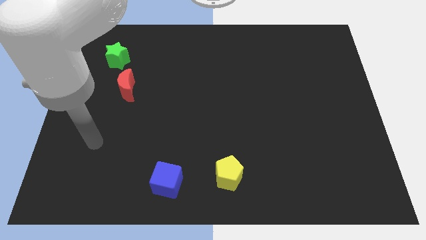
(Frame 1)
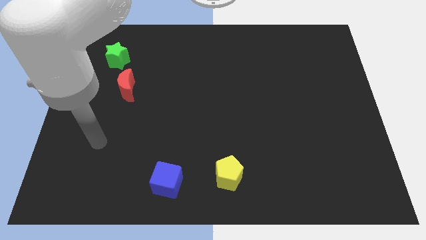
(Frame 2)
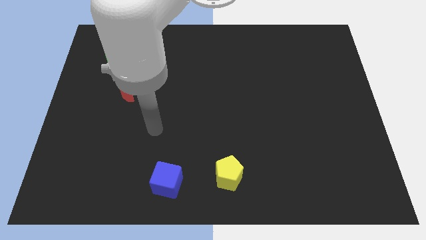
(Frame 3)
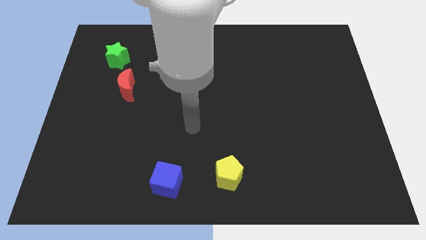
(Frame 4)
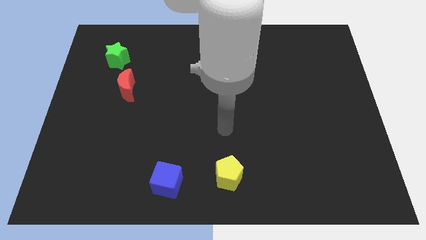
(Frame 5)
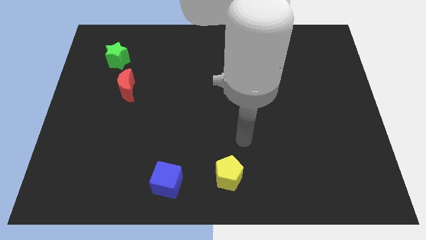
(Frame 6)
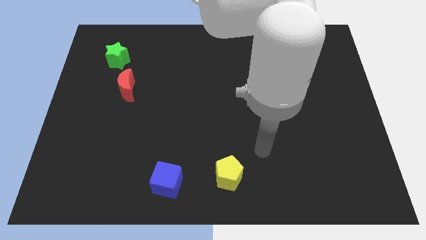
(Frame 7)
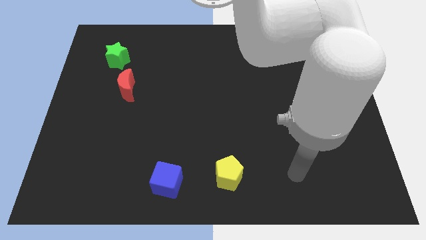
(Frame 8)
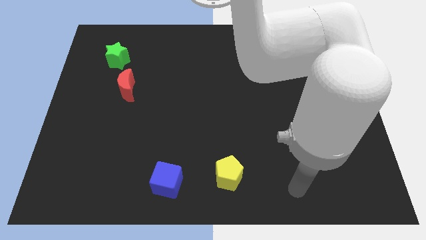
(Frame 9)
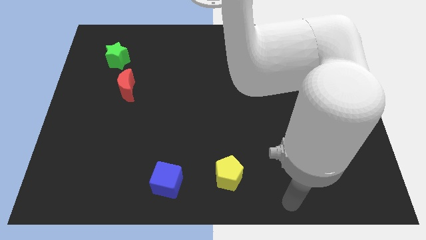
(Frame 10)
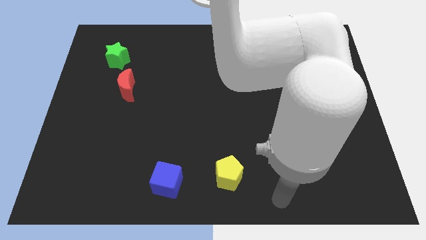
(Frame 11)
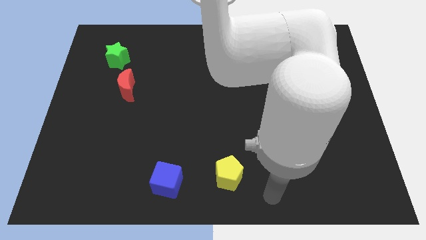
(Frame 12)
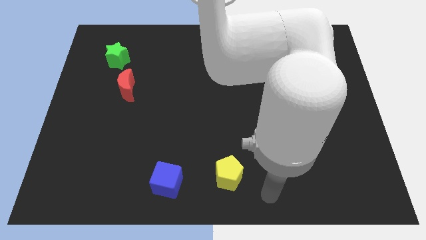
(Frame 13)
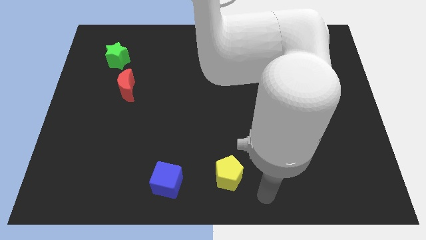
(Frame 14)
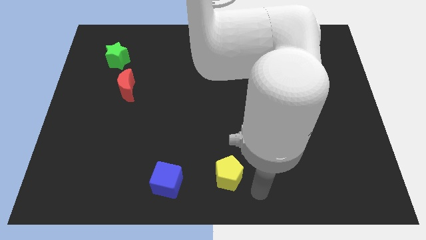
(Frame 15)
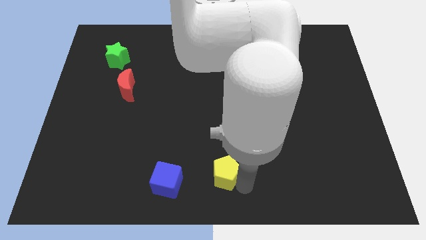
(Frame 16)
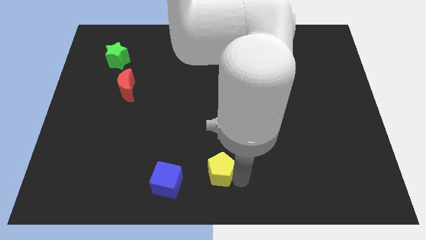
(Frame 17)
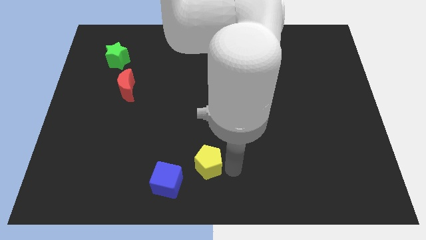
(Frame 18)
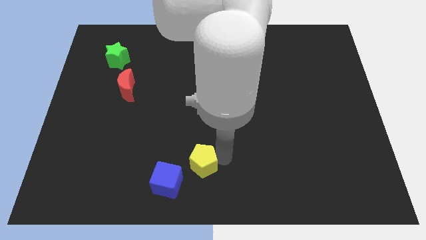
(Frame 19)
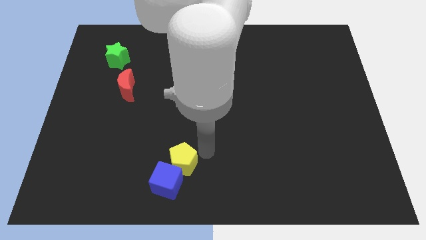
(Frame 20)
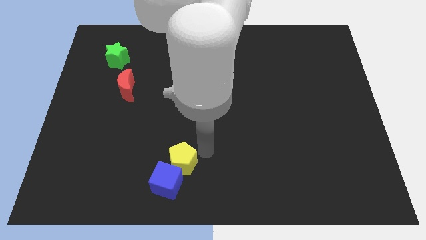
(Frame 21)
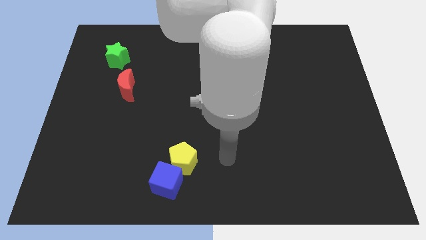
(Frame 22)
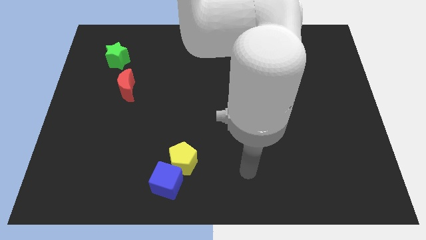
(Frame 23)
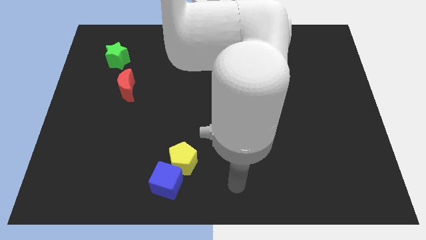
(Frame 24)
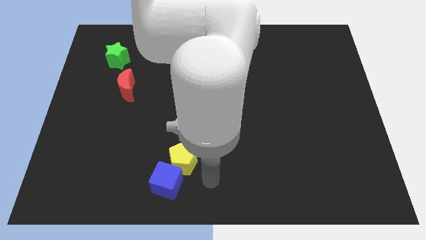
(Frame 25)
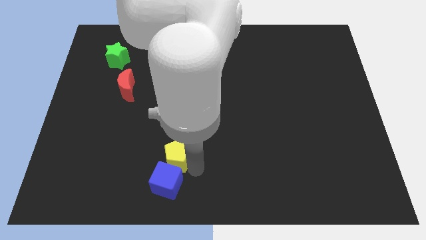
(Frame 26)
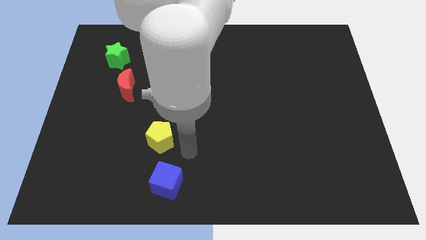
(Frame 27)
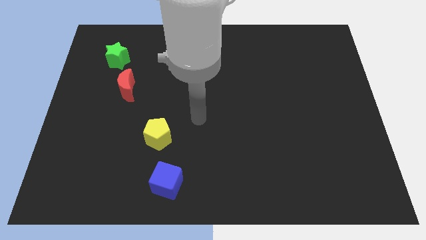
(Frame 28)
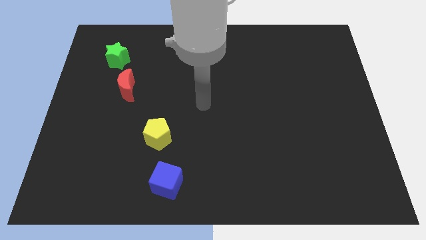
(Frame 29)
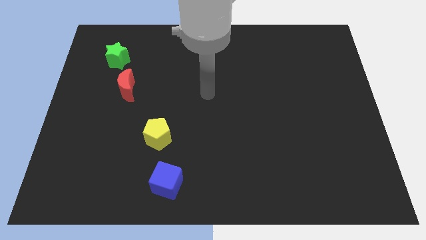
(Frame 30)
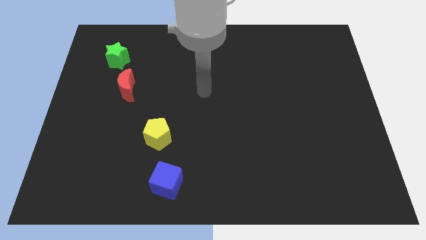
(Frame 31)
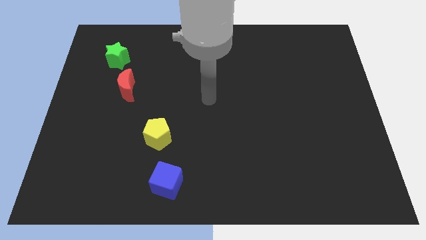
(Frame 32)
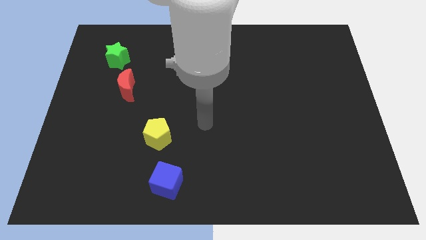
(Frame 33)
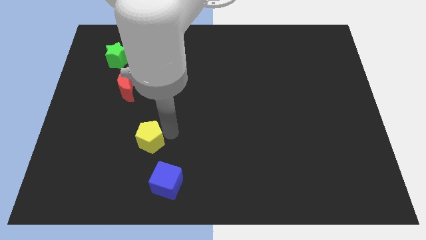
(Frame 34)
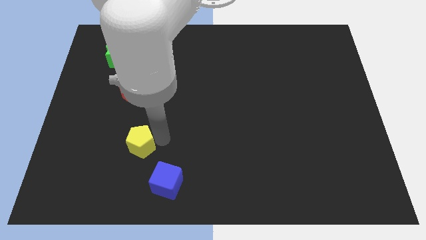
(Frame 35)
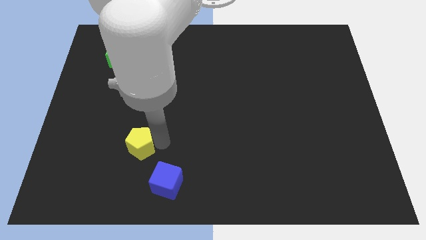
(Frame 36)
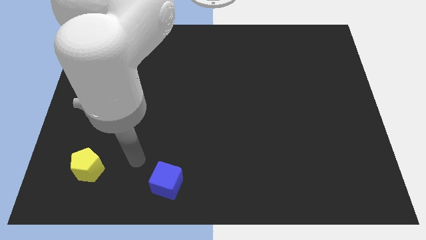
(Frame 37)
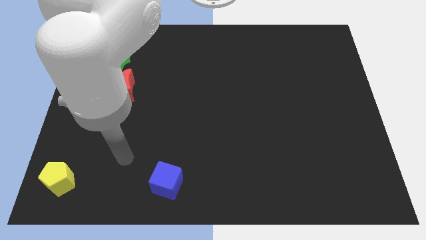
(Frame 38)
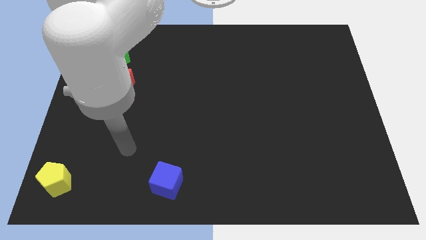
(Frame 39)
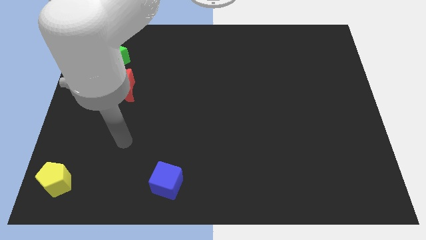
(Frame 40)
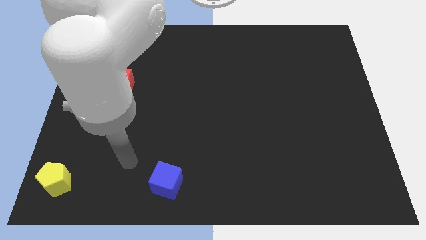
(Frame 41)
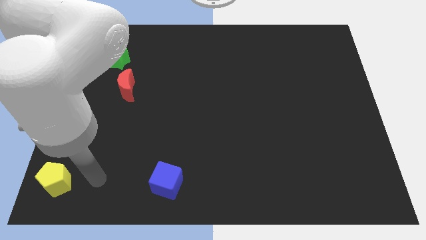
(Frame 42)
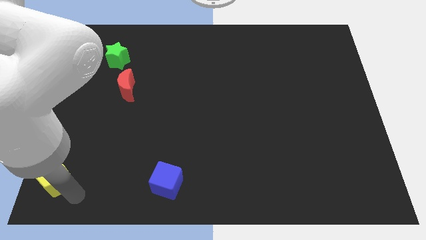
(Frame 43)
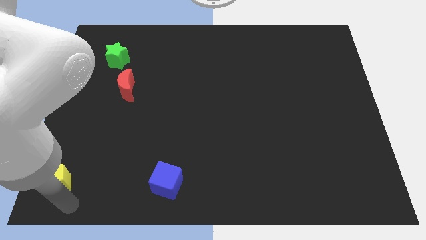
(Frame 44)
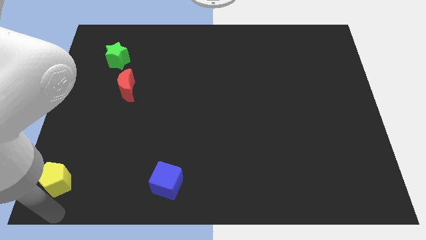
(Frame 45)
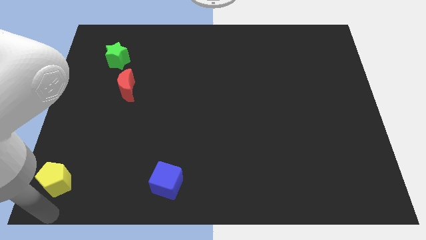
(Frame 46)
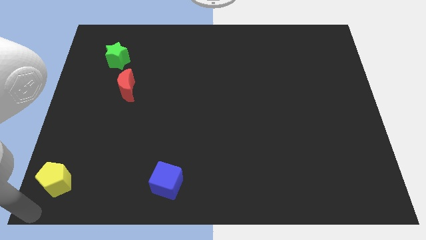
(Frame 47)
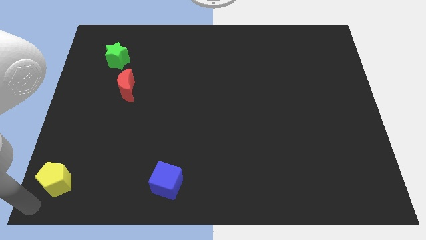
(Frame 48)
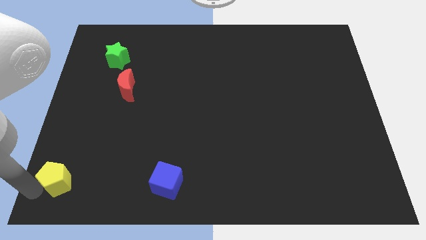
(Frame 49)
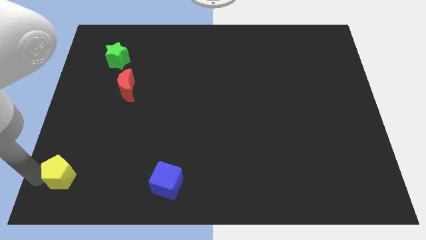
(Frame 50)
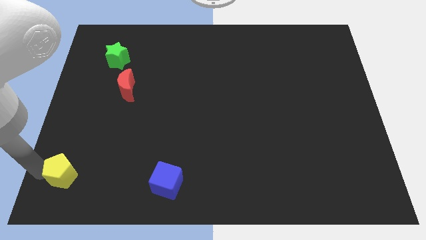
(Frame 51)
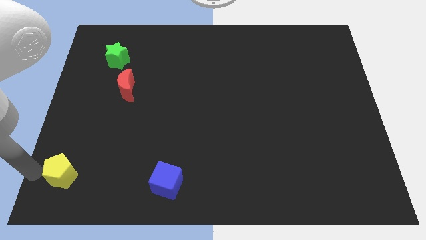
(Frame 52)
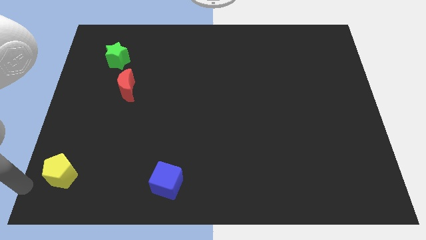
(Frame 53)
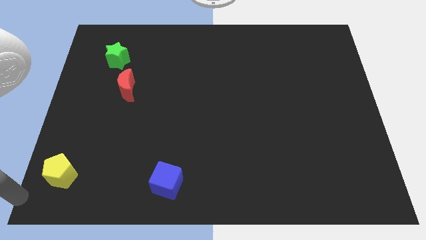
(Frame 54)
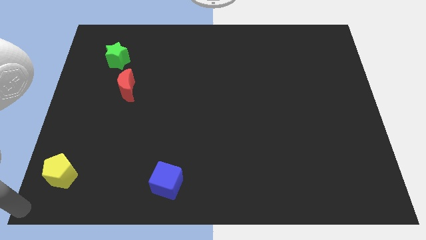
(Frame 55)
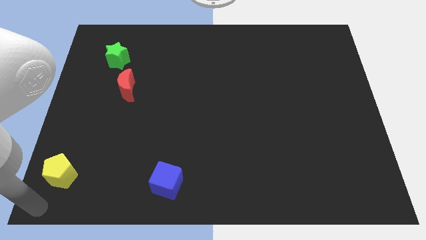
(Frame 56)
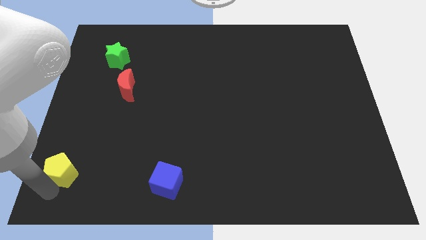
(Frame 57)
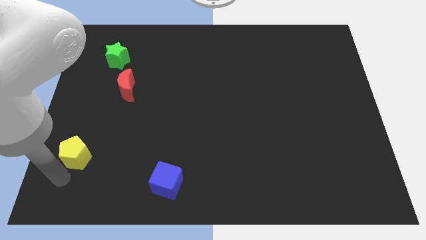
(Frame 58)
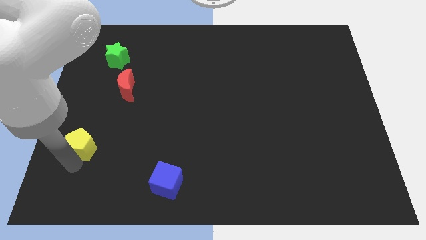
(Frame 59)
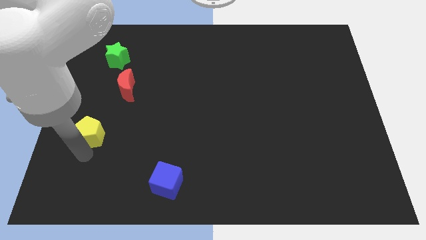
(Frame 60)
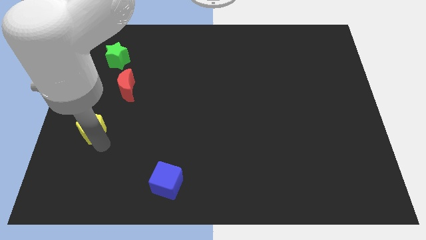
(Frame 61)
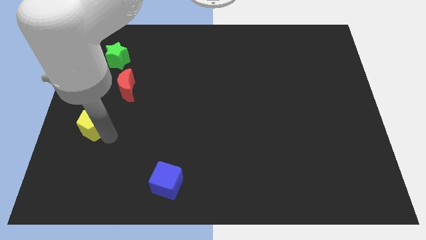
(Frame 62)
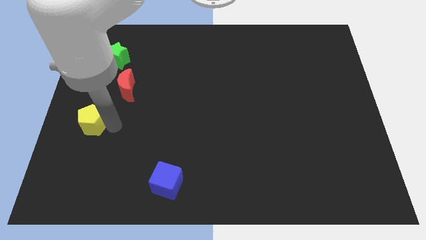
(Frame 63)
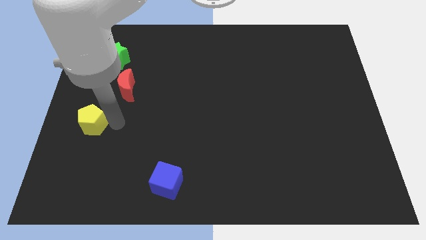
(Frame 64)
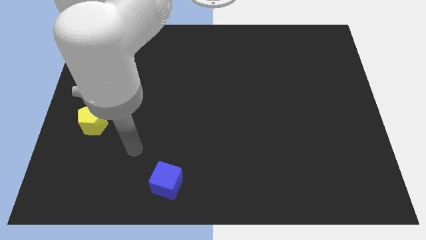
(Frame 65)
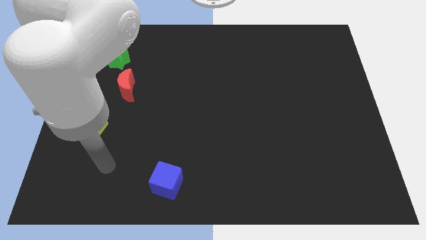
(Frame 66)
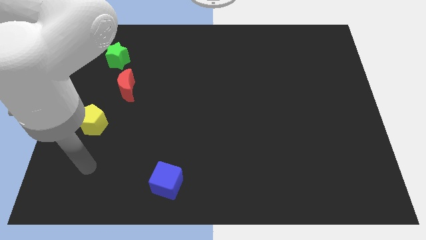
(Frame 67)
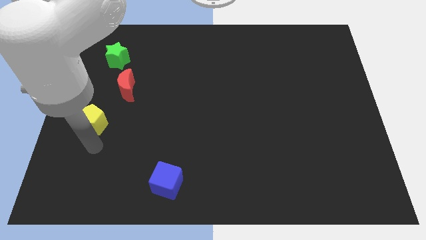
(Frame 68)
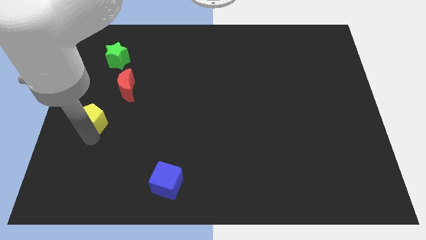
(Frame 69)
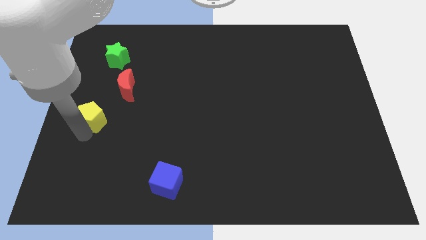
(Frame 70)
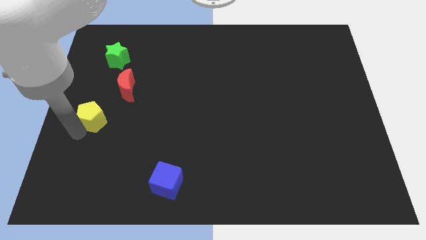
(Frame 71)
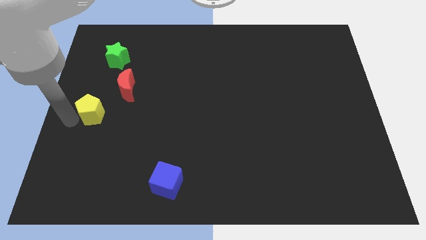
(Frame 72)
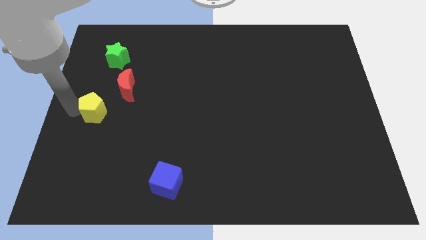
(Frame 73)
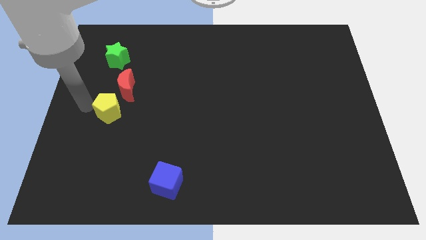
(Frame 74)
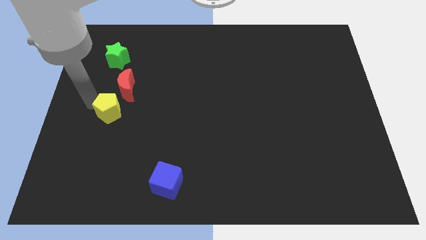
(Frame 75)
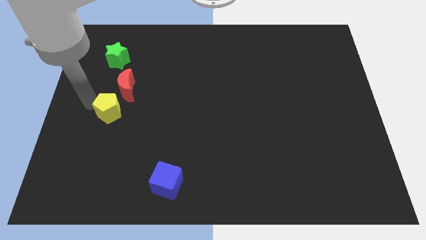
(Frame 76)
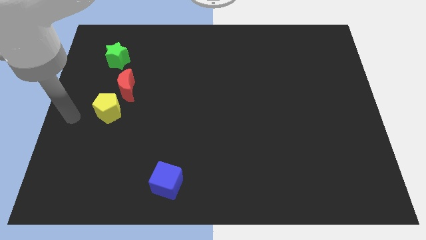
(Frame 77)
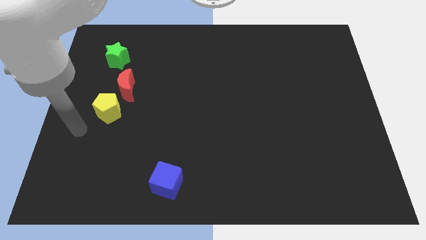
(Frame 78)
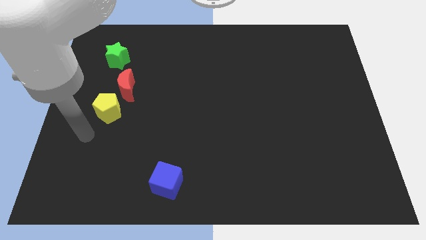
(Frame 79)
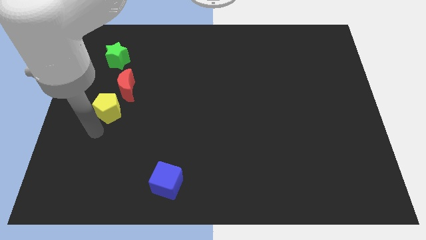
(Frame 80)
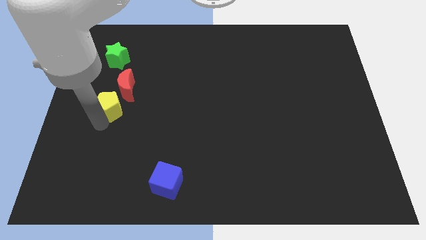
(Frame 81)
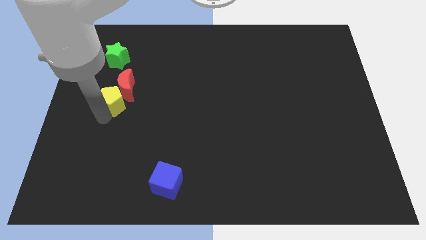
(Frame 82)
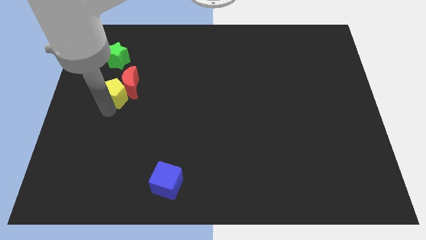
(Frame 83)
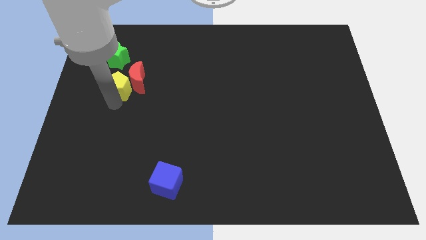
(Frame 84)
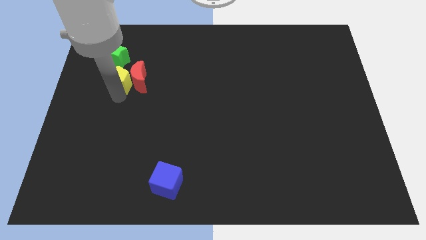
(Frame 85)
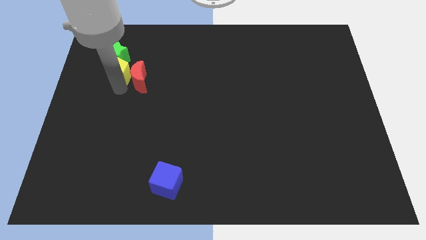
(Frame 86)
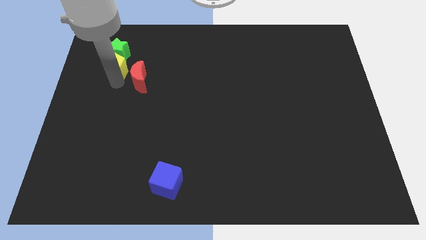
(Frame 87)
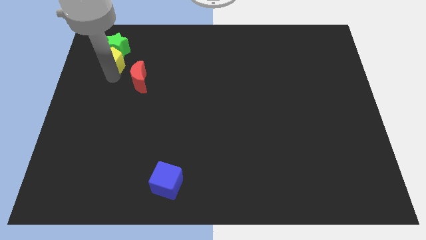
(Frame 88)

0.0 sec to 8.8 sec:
push the yellow block close to the green block
